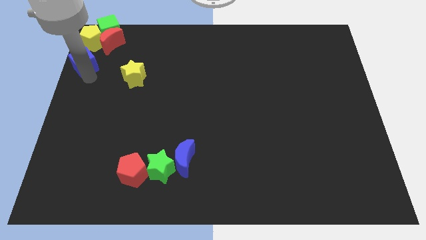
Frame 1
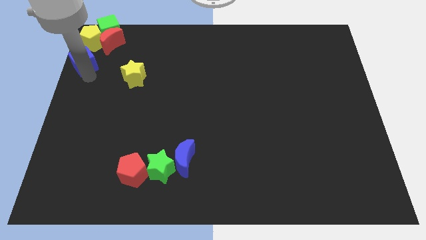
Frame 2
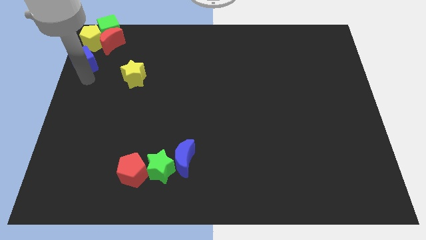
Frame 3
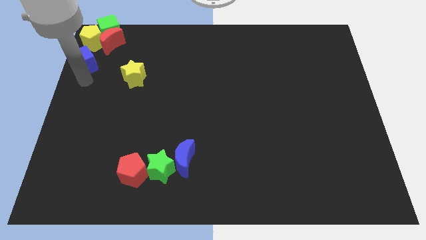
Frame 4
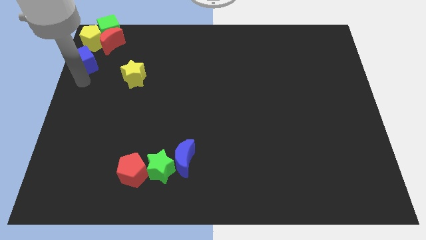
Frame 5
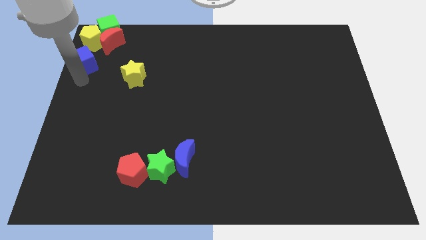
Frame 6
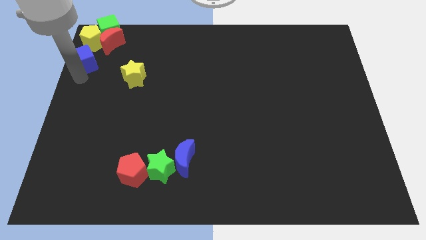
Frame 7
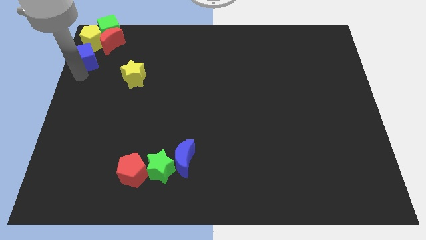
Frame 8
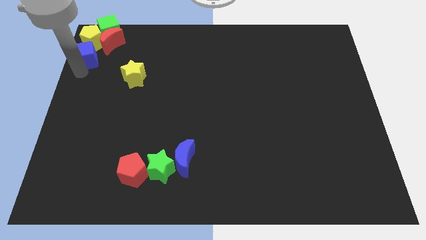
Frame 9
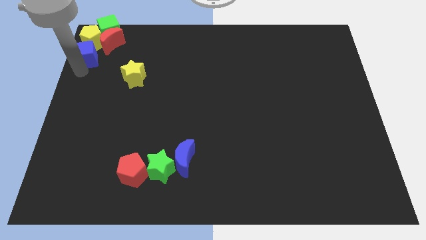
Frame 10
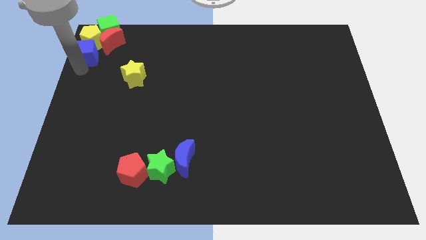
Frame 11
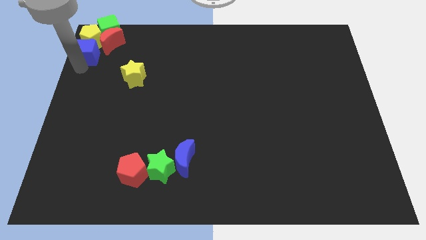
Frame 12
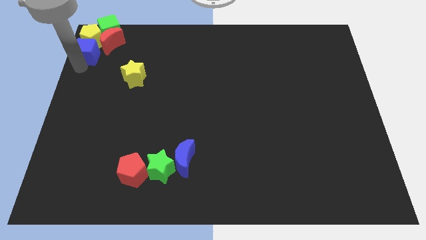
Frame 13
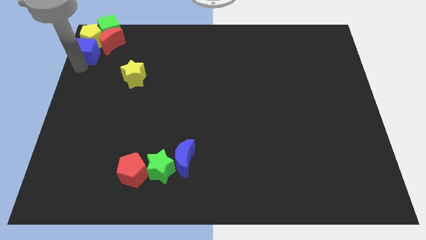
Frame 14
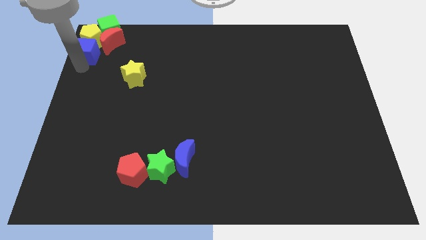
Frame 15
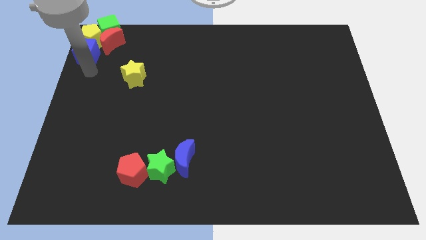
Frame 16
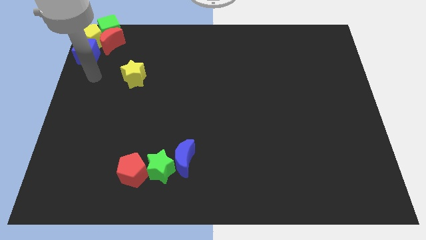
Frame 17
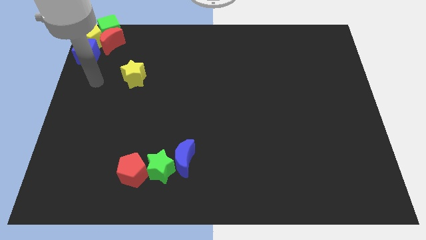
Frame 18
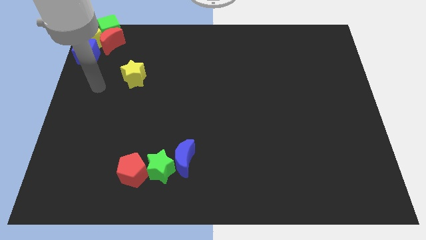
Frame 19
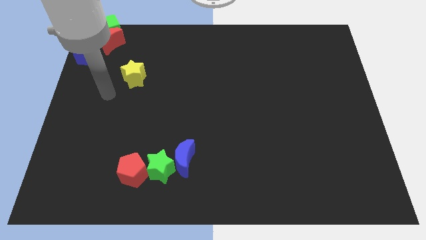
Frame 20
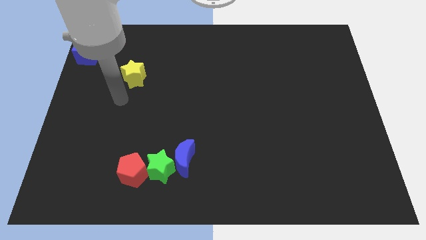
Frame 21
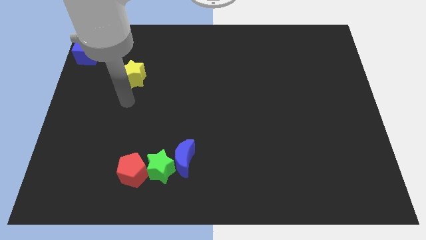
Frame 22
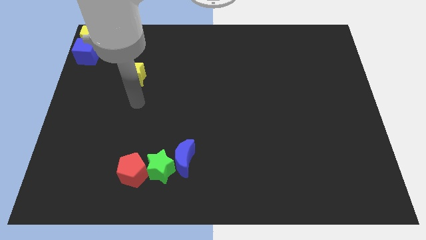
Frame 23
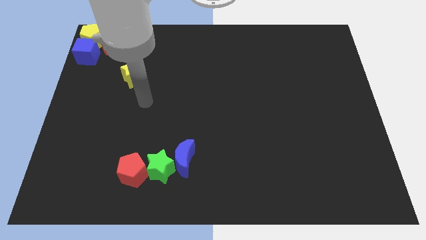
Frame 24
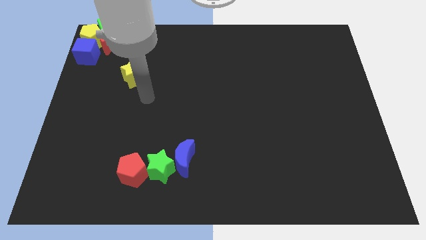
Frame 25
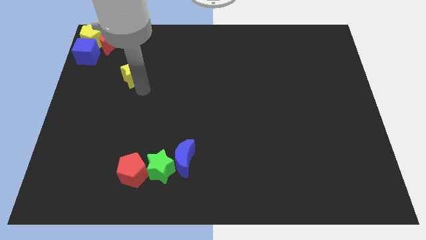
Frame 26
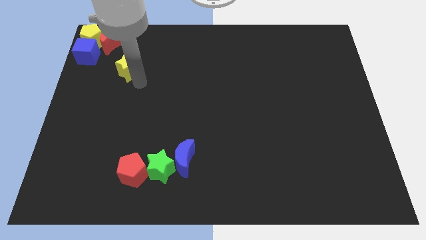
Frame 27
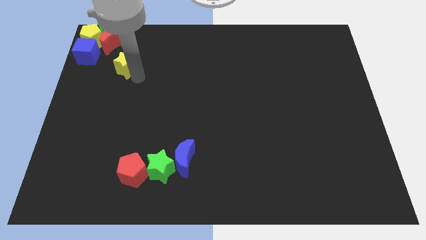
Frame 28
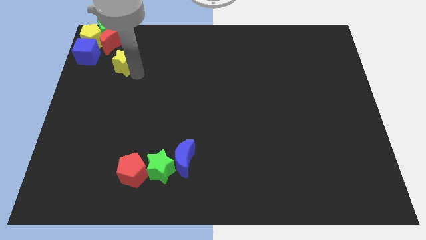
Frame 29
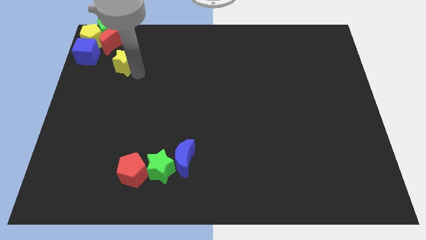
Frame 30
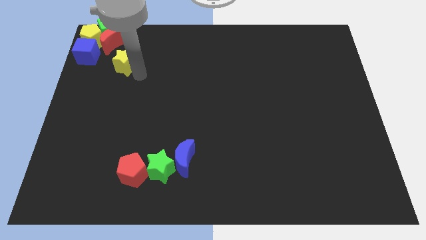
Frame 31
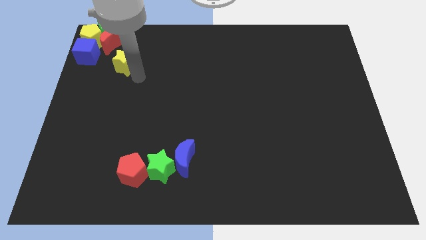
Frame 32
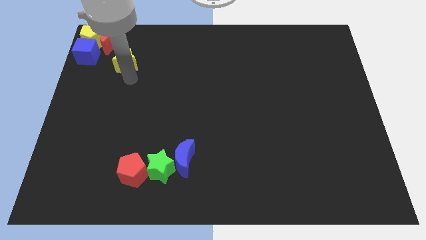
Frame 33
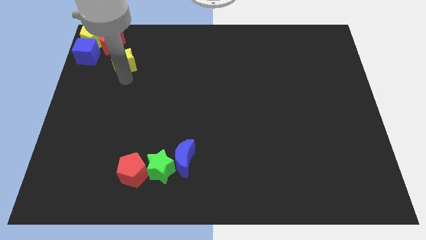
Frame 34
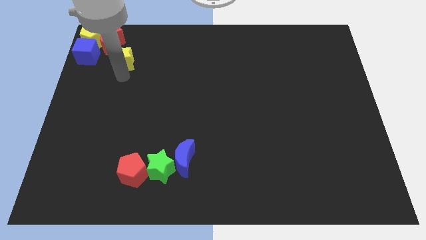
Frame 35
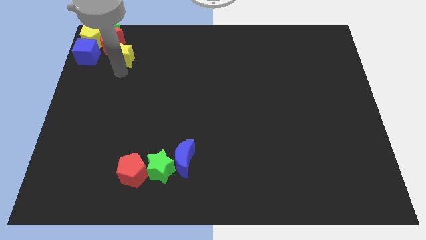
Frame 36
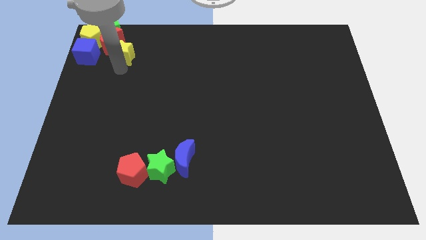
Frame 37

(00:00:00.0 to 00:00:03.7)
push the yellow star into the red crescent

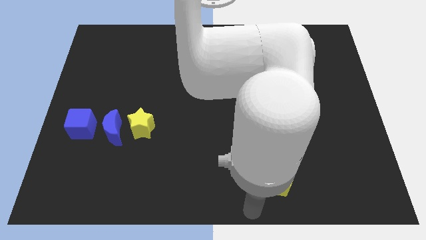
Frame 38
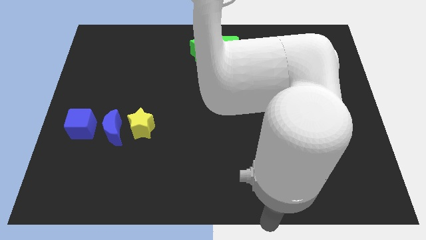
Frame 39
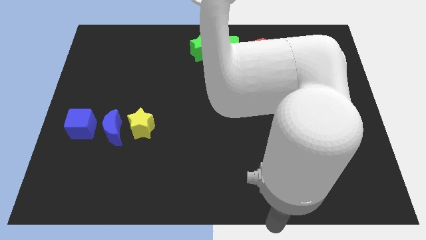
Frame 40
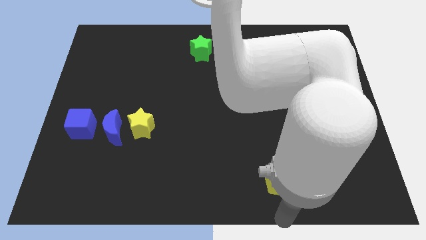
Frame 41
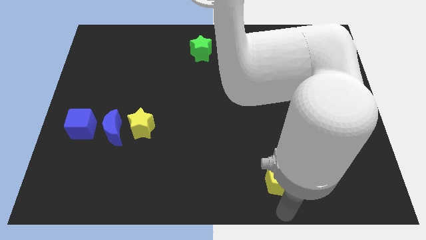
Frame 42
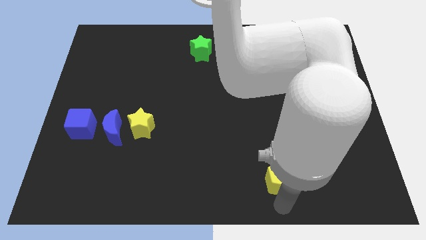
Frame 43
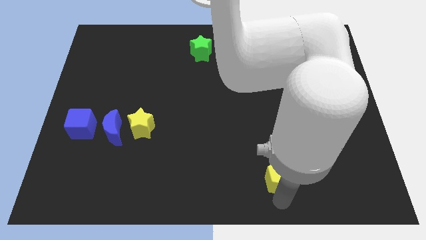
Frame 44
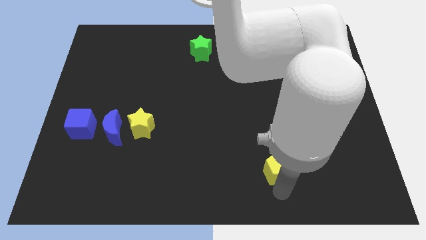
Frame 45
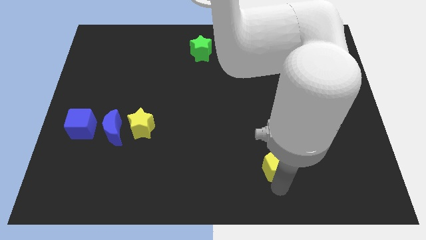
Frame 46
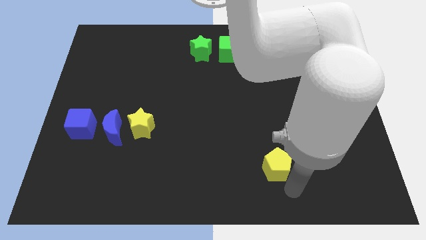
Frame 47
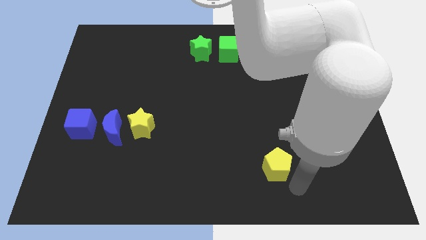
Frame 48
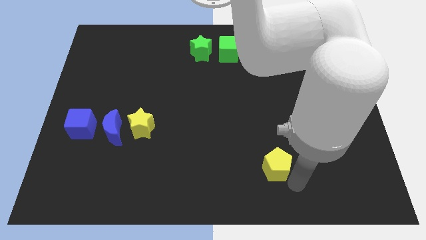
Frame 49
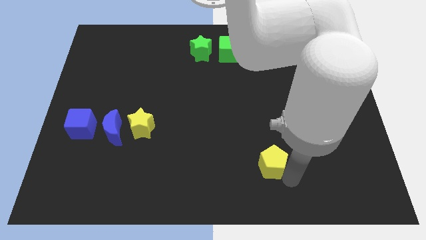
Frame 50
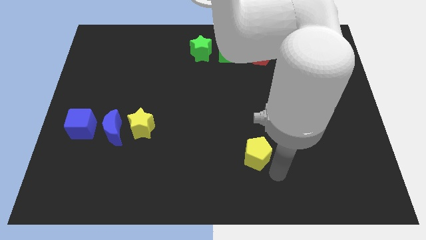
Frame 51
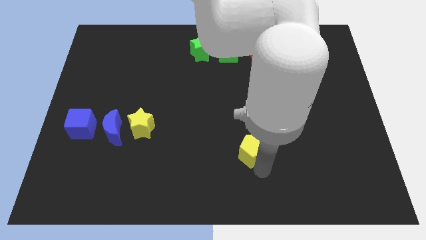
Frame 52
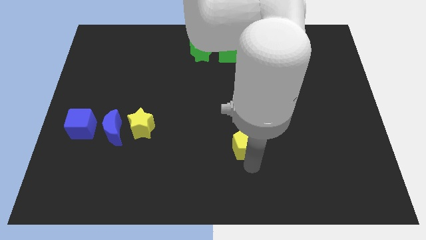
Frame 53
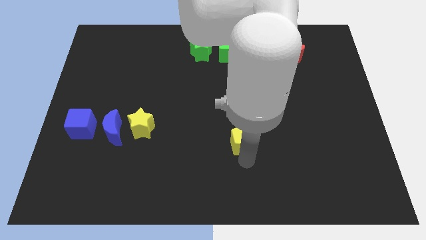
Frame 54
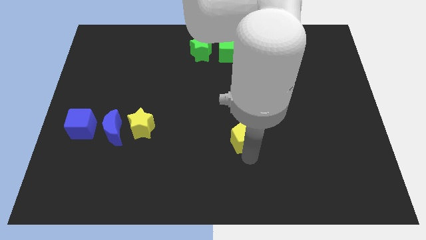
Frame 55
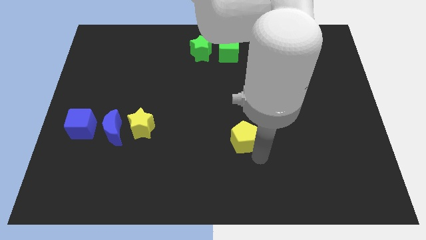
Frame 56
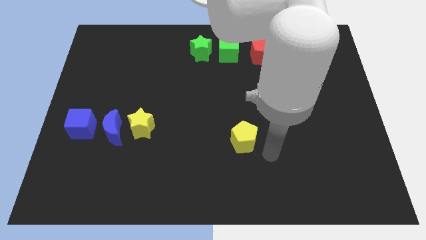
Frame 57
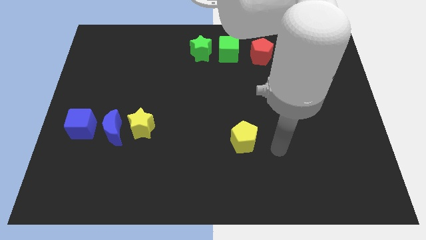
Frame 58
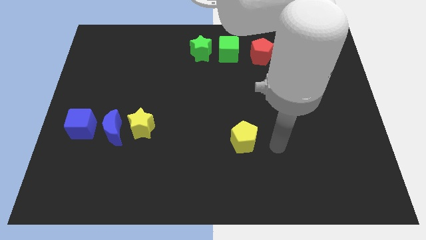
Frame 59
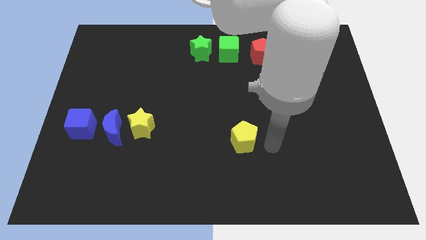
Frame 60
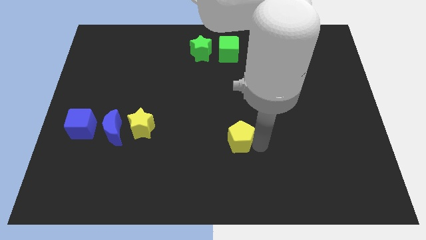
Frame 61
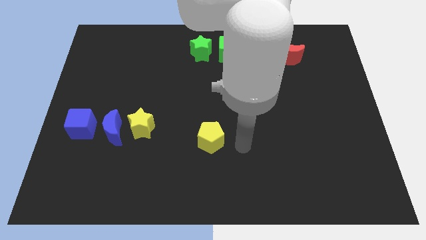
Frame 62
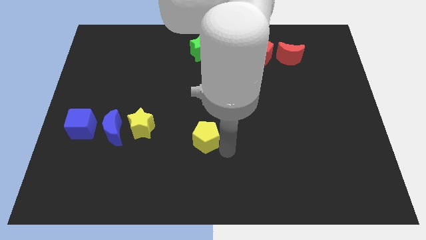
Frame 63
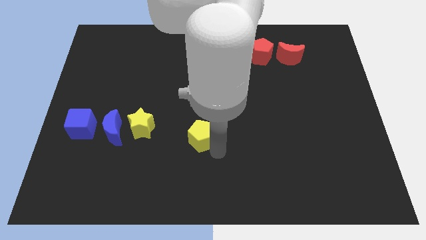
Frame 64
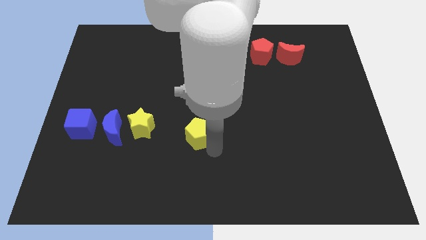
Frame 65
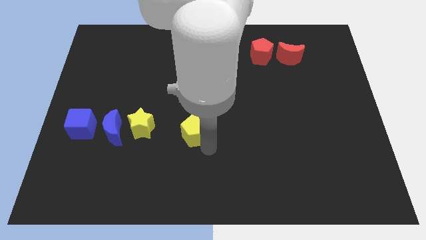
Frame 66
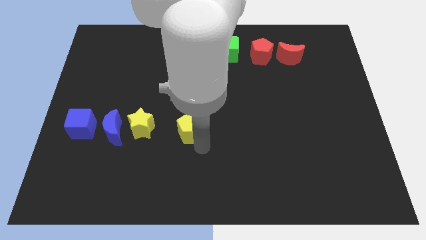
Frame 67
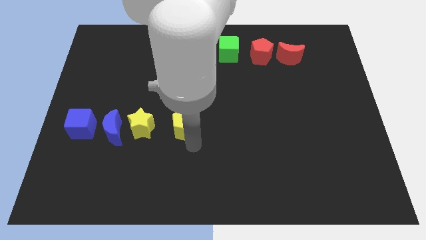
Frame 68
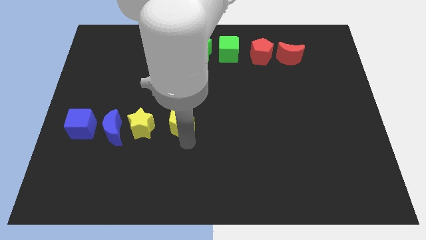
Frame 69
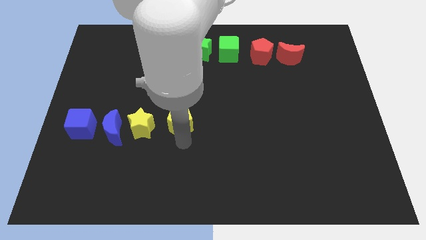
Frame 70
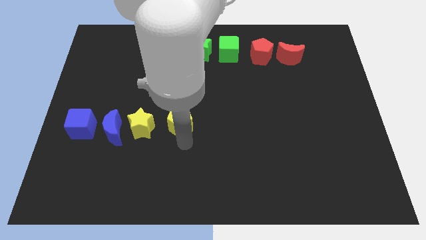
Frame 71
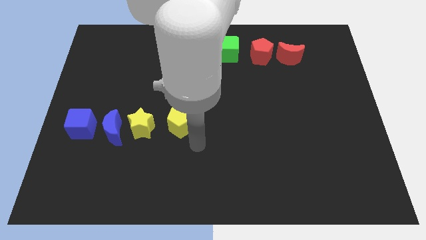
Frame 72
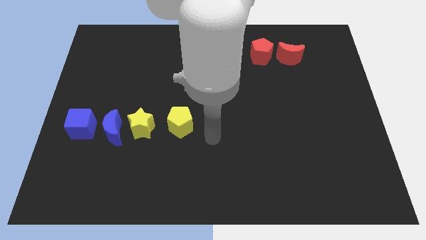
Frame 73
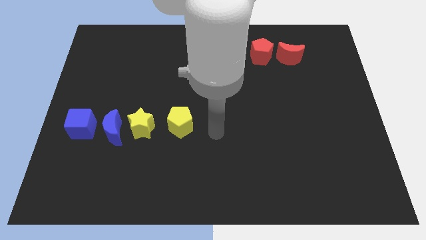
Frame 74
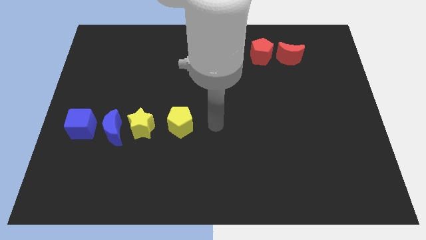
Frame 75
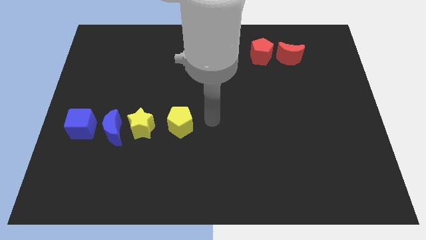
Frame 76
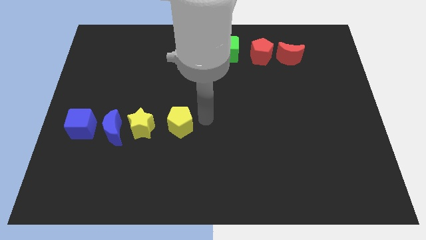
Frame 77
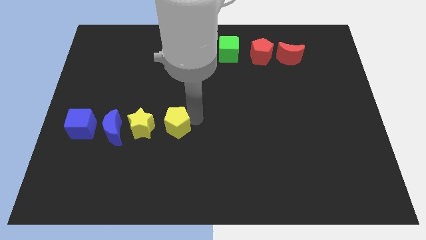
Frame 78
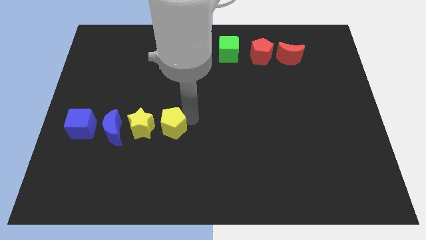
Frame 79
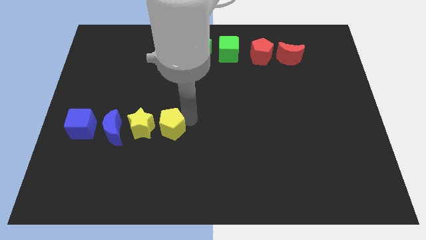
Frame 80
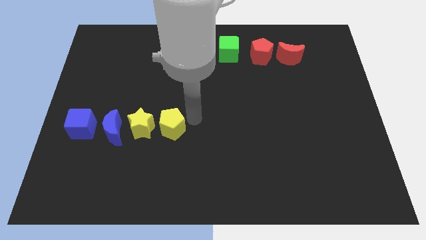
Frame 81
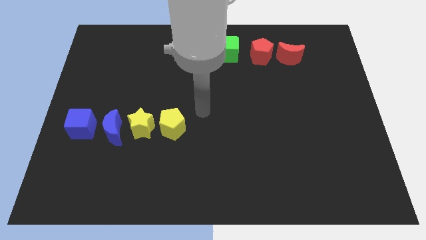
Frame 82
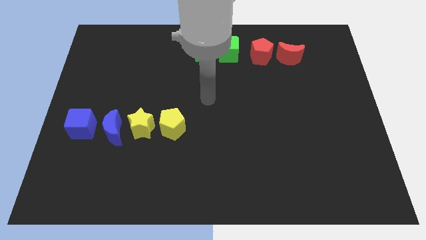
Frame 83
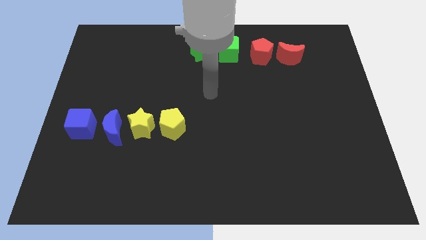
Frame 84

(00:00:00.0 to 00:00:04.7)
push the yellow pentagon to the right side of the yellow star

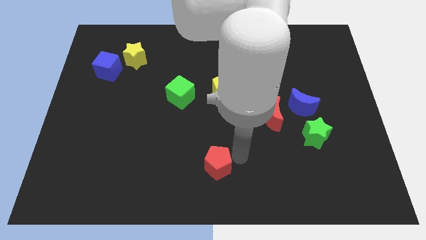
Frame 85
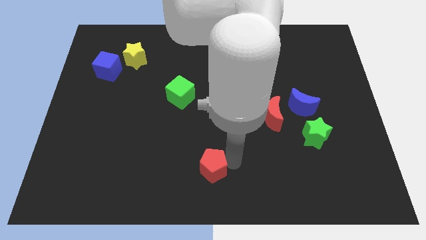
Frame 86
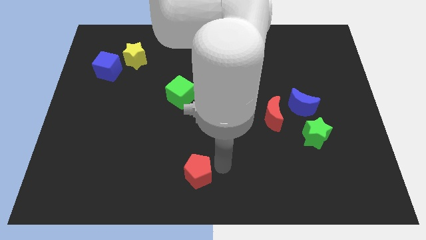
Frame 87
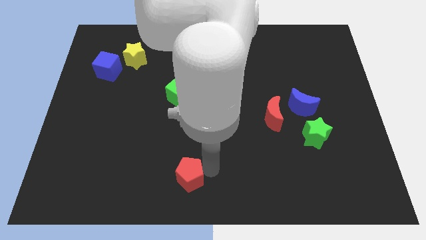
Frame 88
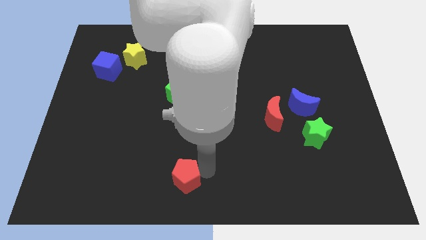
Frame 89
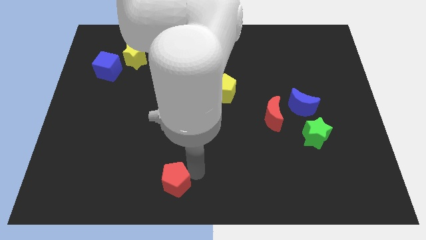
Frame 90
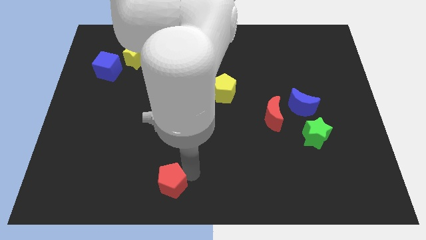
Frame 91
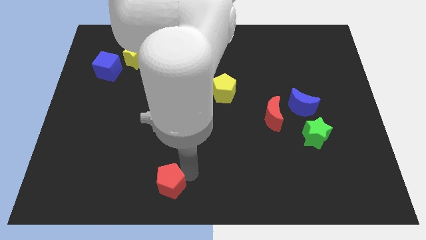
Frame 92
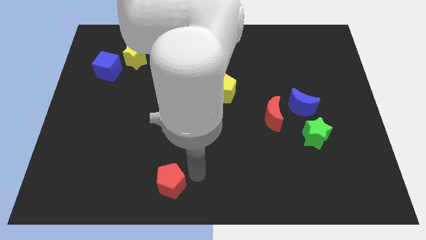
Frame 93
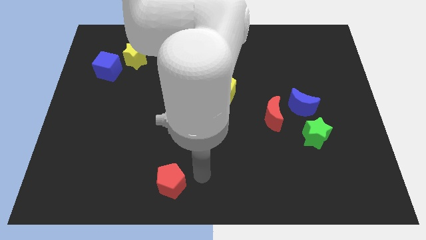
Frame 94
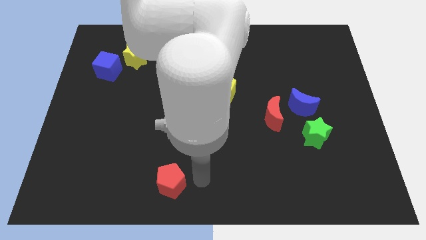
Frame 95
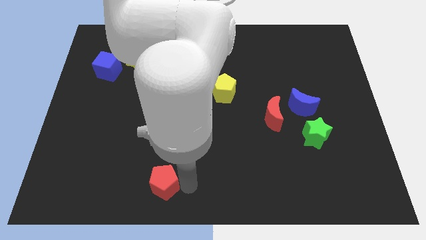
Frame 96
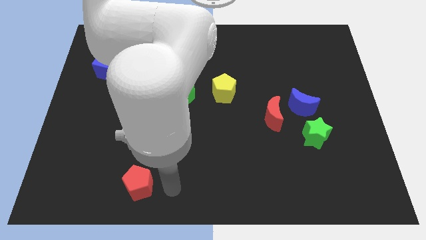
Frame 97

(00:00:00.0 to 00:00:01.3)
move the red pentagon towards the left of the board
